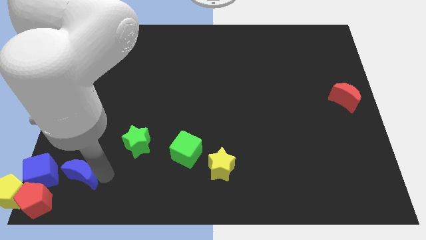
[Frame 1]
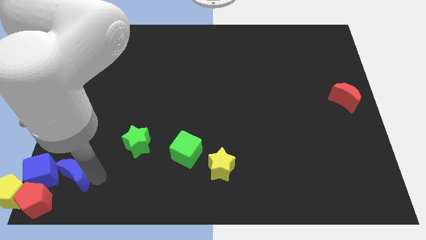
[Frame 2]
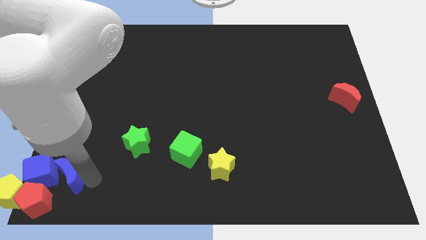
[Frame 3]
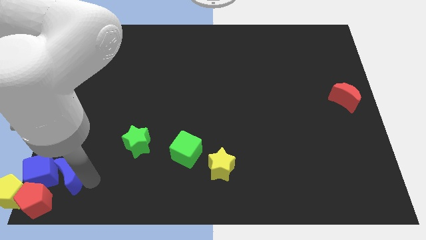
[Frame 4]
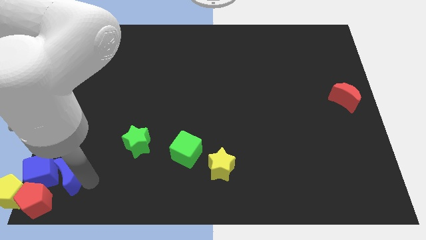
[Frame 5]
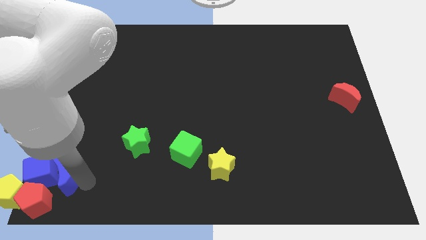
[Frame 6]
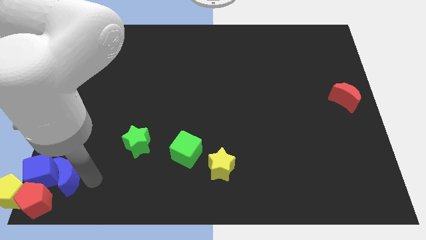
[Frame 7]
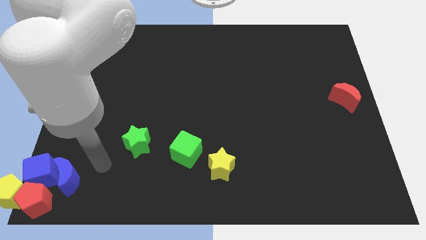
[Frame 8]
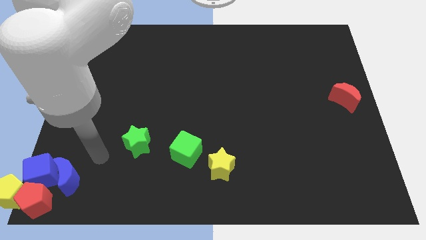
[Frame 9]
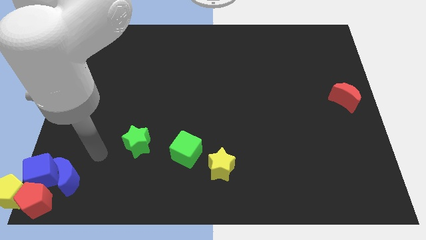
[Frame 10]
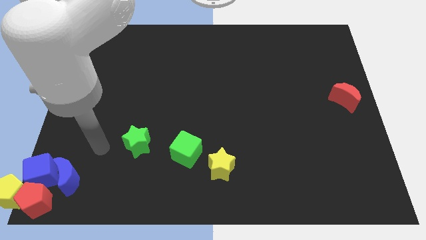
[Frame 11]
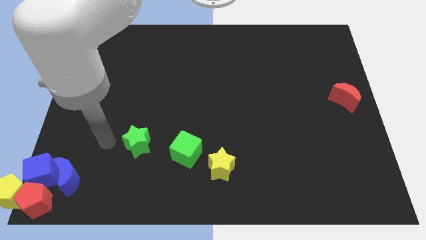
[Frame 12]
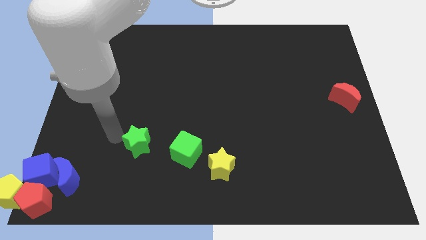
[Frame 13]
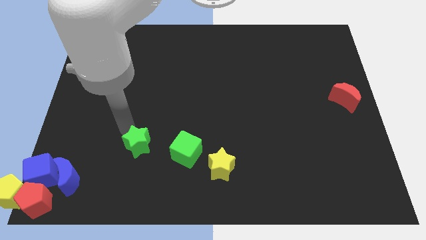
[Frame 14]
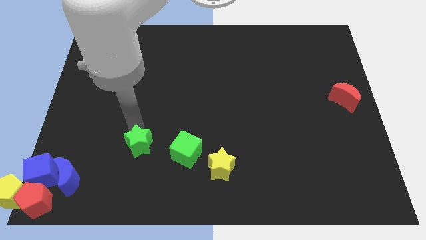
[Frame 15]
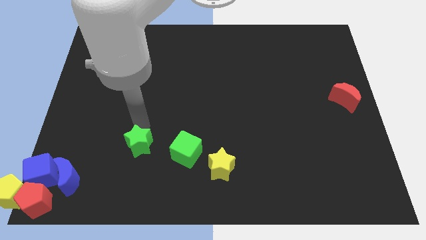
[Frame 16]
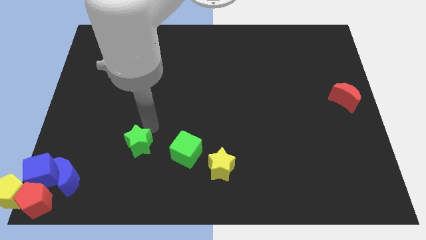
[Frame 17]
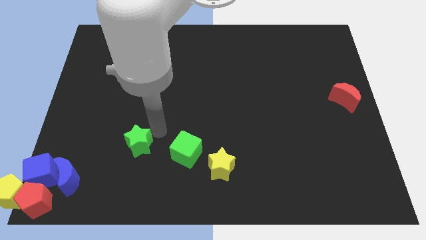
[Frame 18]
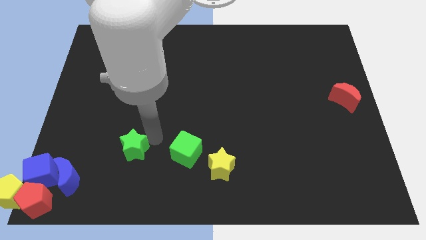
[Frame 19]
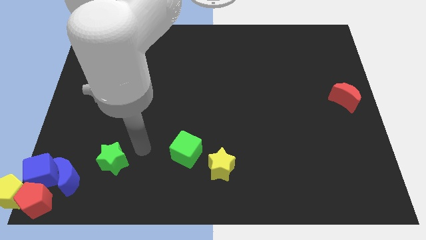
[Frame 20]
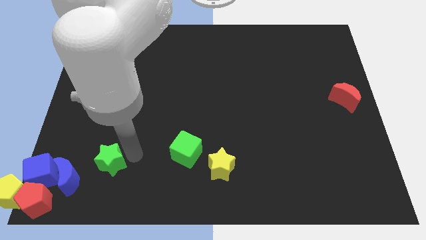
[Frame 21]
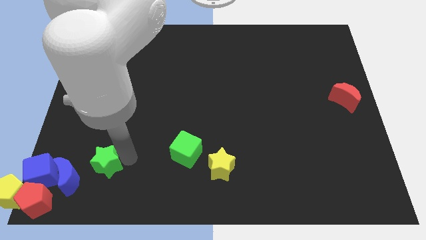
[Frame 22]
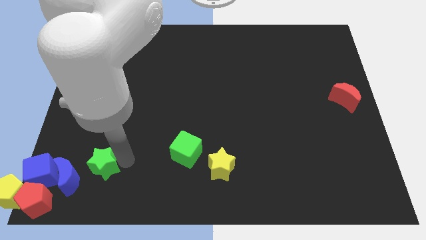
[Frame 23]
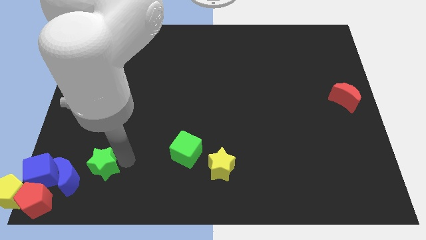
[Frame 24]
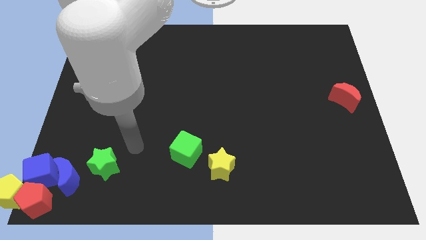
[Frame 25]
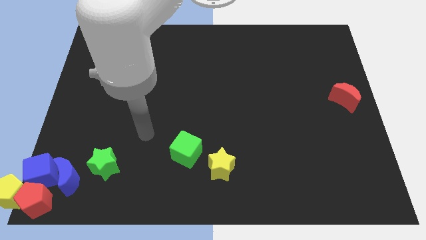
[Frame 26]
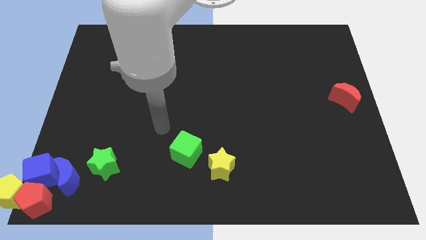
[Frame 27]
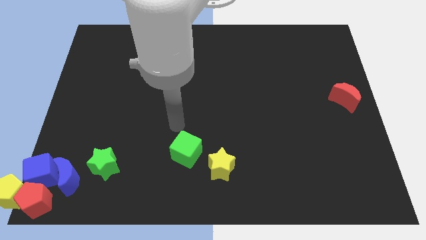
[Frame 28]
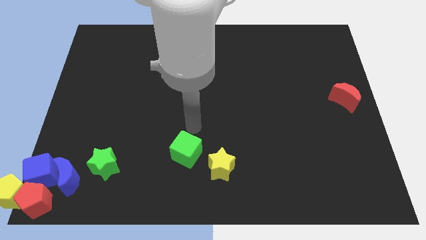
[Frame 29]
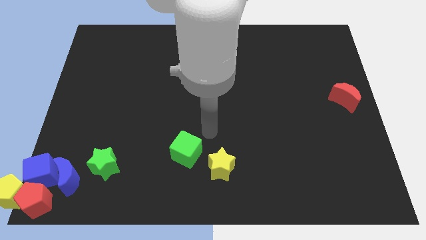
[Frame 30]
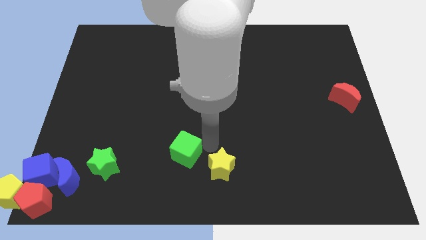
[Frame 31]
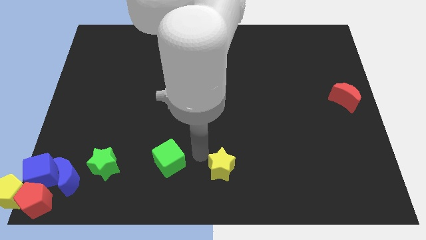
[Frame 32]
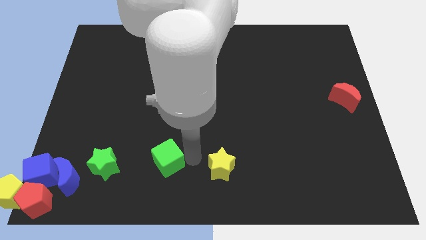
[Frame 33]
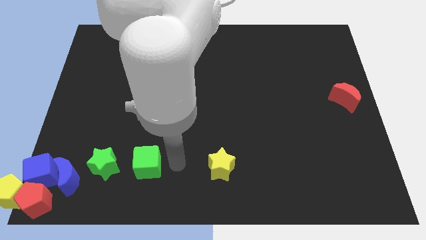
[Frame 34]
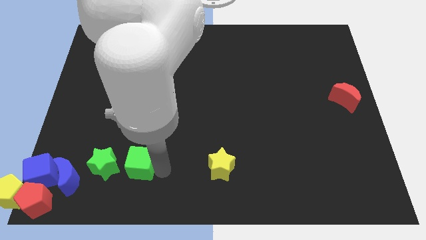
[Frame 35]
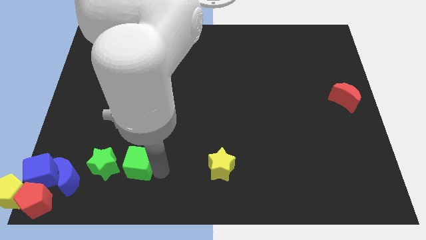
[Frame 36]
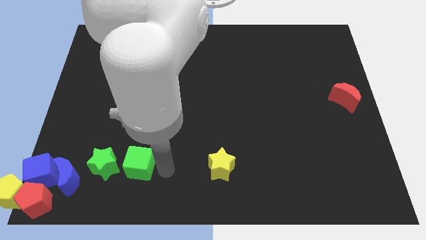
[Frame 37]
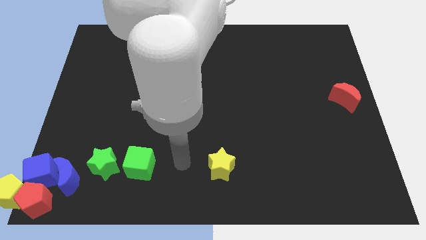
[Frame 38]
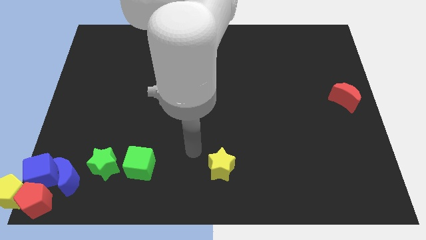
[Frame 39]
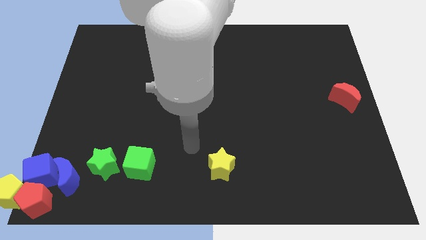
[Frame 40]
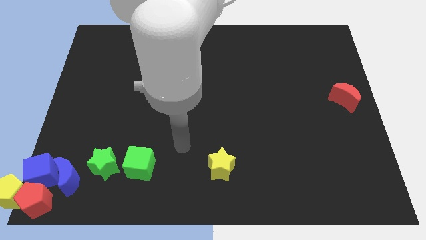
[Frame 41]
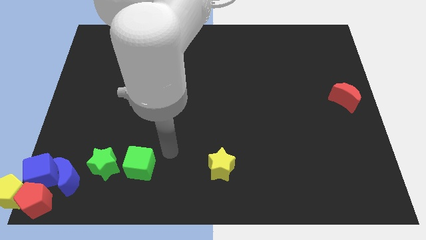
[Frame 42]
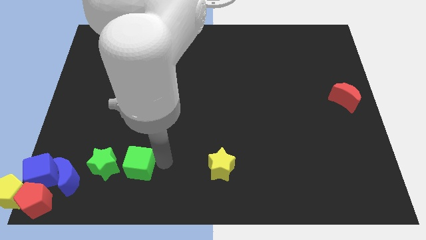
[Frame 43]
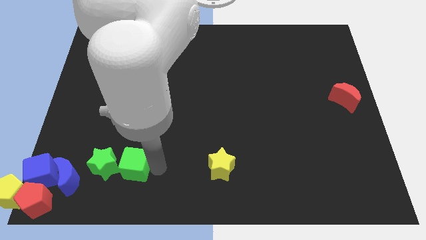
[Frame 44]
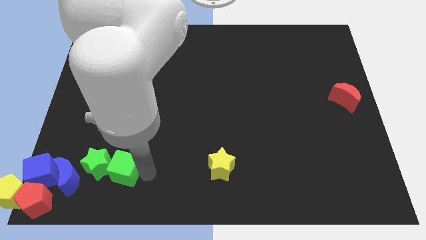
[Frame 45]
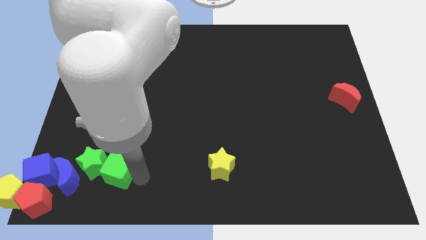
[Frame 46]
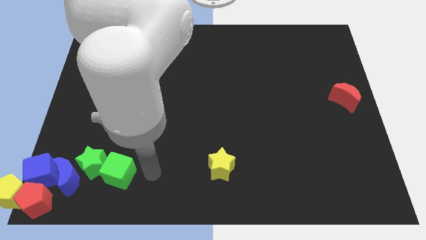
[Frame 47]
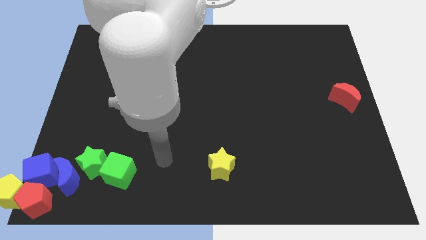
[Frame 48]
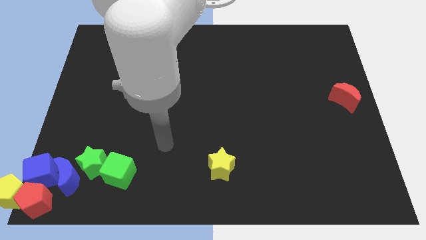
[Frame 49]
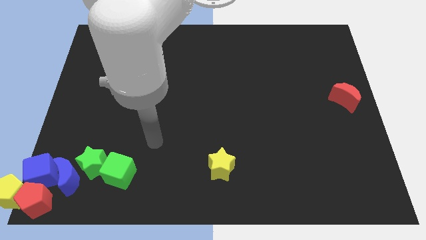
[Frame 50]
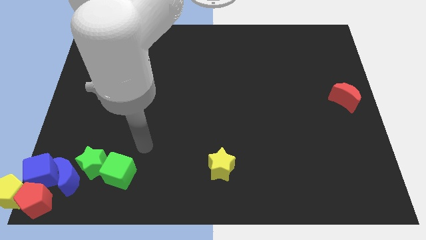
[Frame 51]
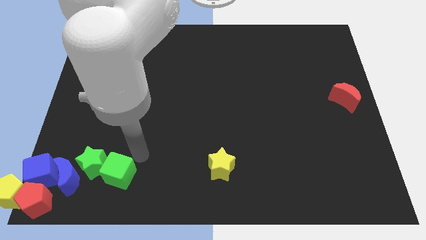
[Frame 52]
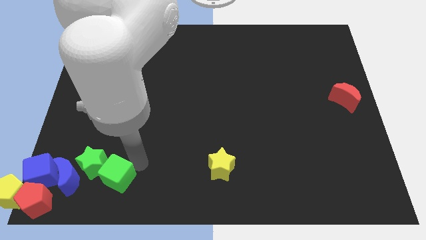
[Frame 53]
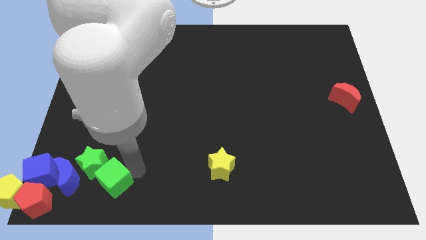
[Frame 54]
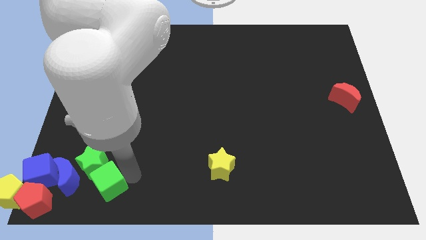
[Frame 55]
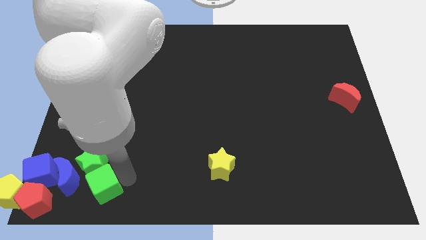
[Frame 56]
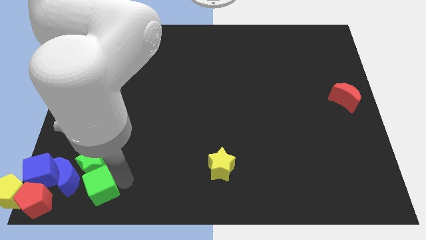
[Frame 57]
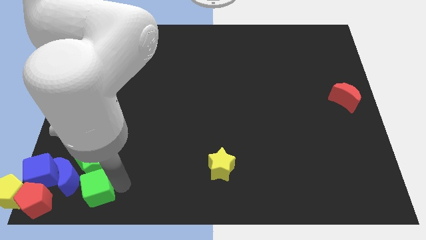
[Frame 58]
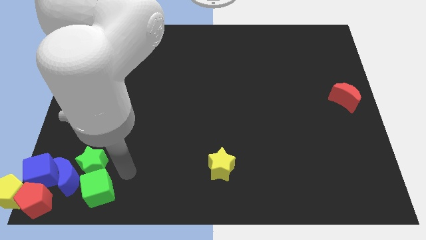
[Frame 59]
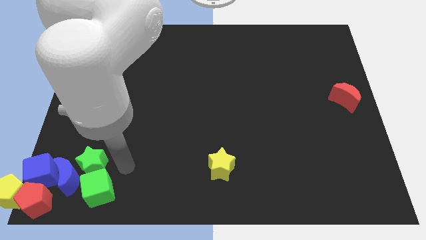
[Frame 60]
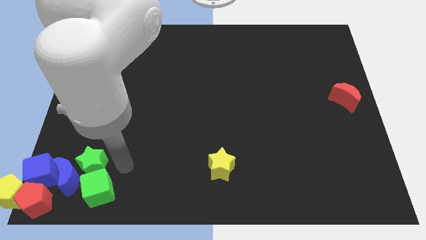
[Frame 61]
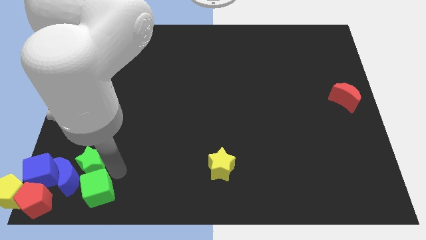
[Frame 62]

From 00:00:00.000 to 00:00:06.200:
push blue moon and green blocks towards the group of blocks in the bottom left

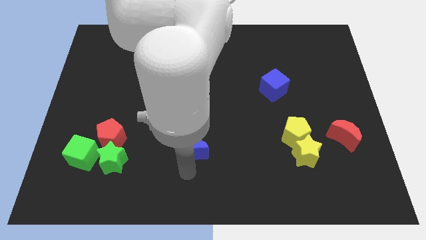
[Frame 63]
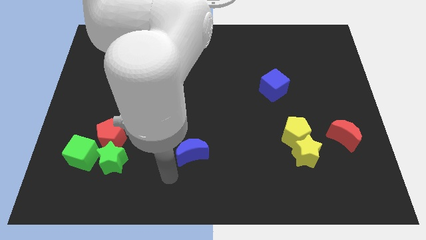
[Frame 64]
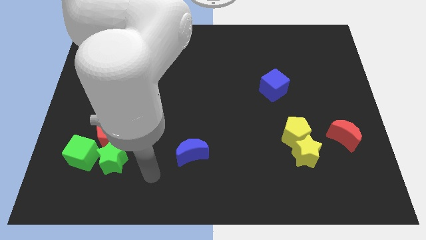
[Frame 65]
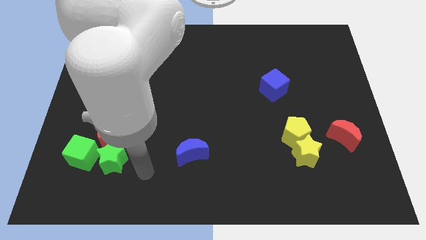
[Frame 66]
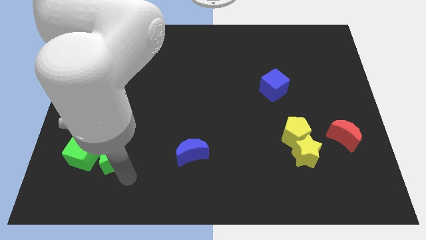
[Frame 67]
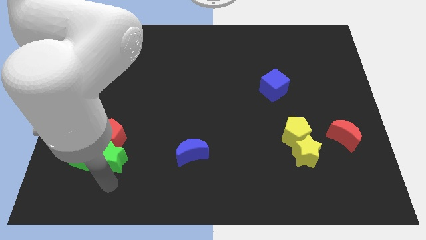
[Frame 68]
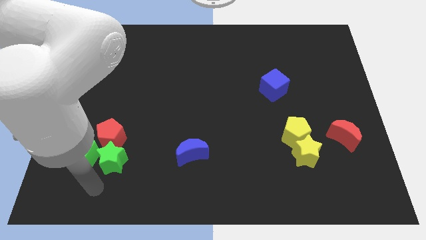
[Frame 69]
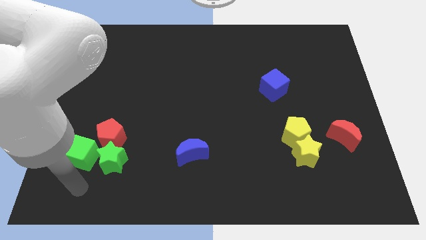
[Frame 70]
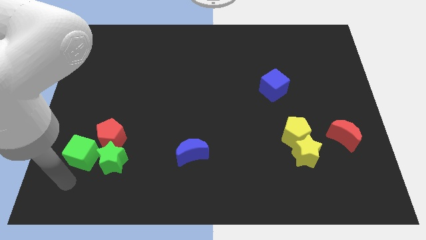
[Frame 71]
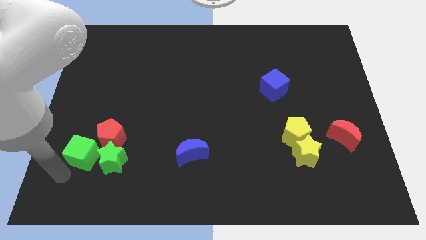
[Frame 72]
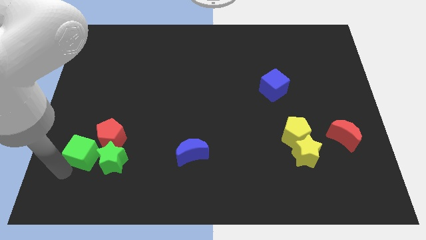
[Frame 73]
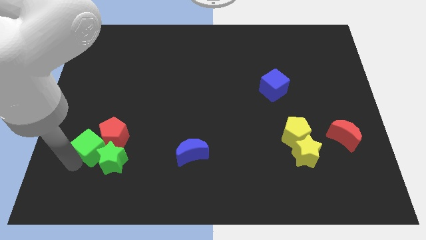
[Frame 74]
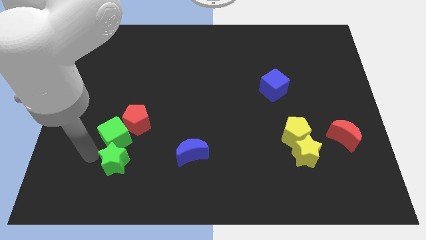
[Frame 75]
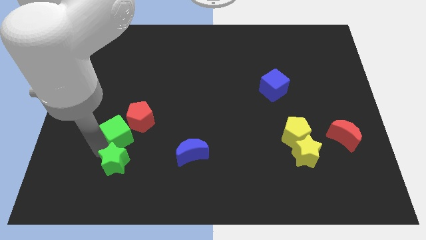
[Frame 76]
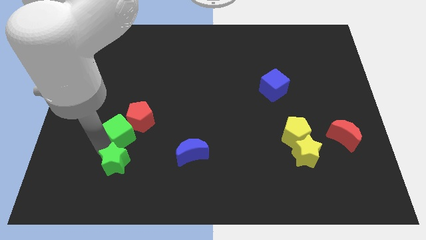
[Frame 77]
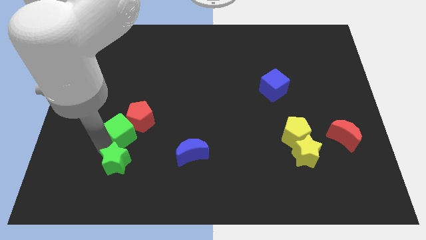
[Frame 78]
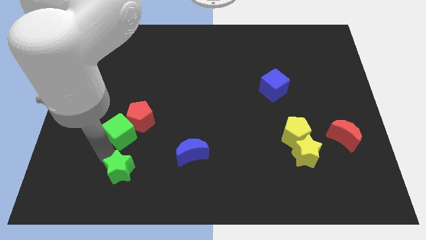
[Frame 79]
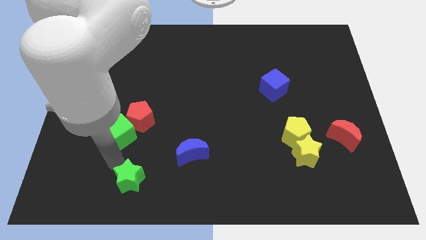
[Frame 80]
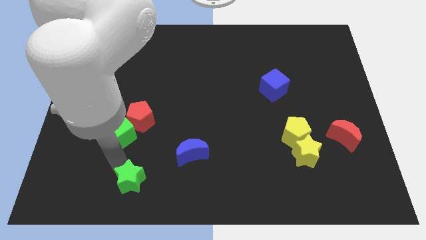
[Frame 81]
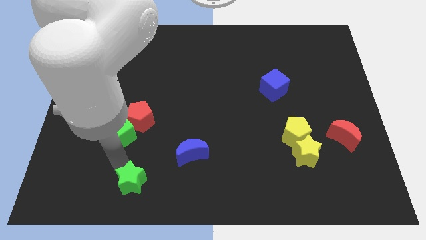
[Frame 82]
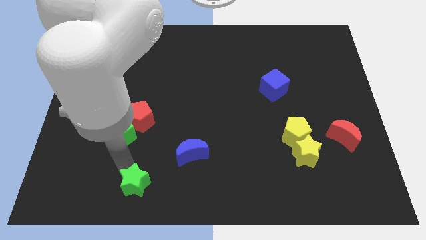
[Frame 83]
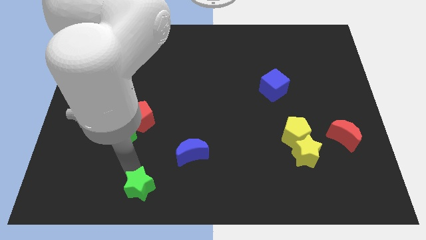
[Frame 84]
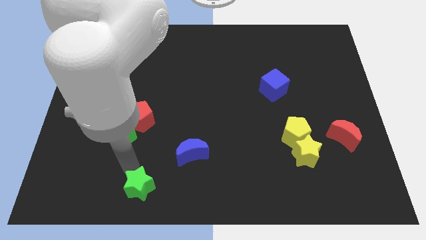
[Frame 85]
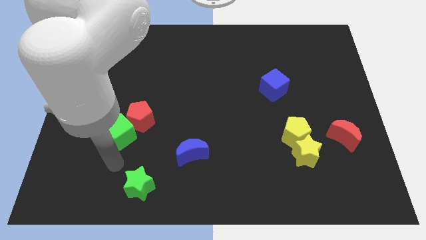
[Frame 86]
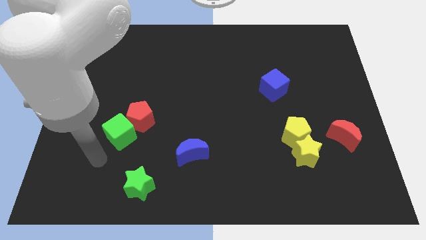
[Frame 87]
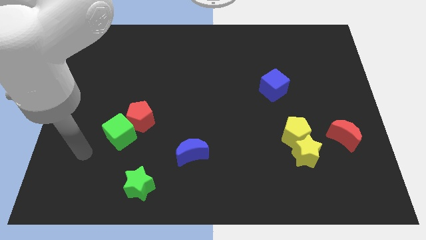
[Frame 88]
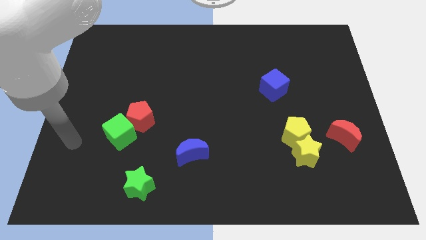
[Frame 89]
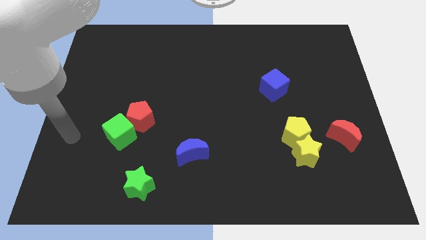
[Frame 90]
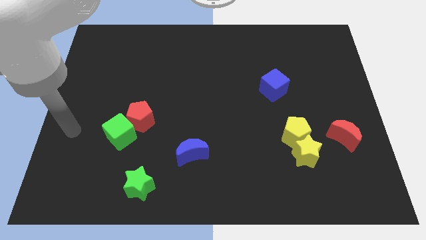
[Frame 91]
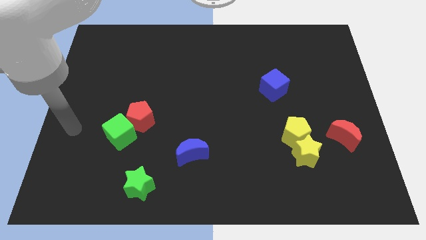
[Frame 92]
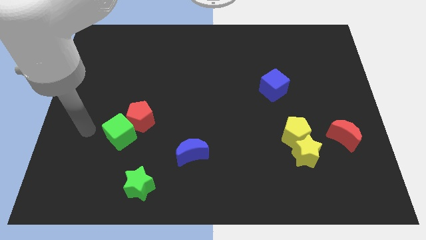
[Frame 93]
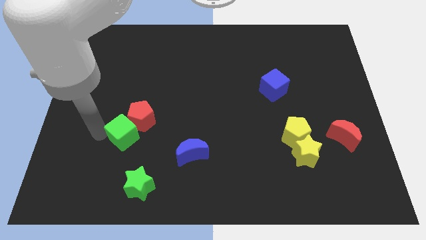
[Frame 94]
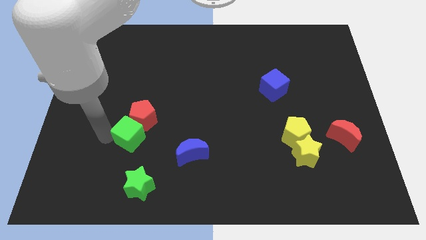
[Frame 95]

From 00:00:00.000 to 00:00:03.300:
separate green star from green cube
